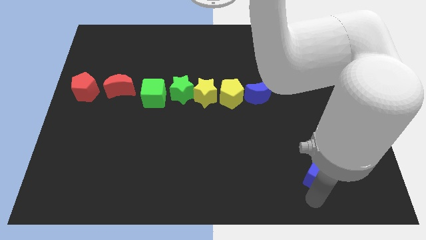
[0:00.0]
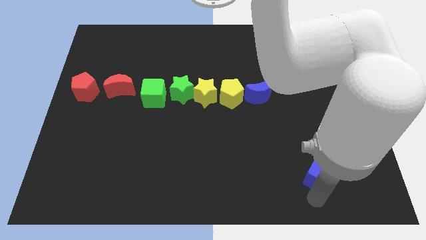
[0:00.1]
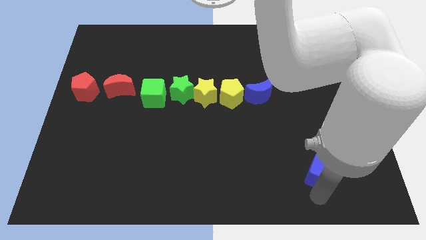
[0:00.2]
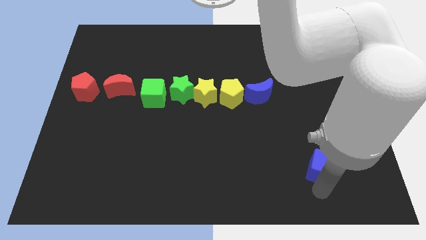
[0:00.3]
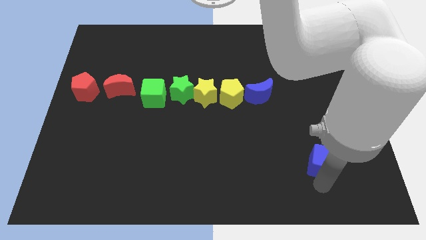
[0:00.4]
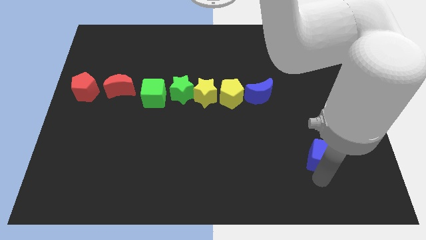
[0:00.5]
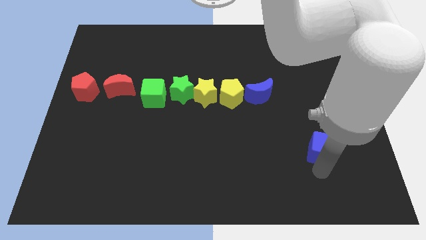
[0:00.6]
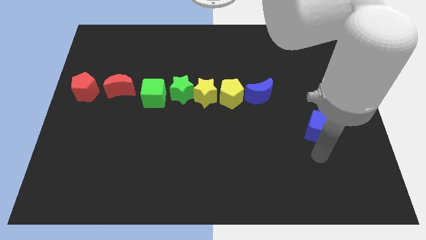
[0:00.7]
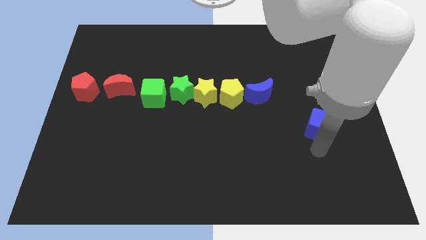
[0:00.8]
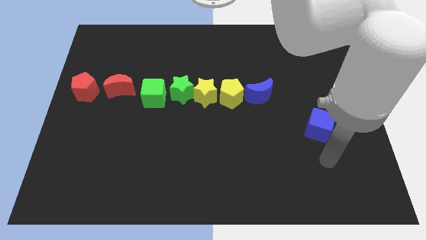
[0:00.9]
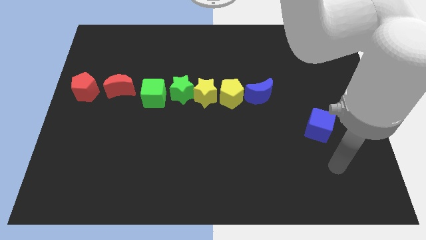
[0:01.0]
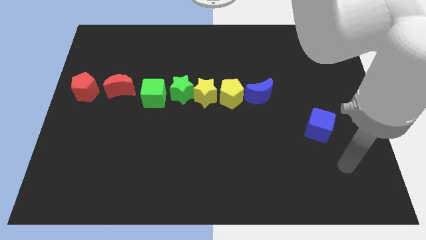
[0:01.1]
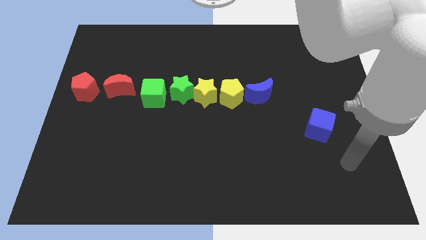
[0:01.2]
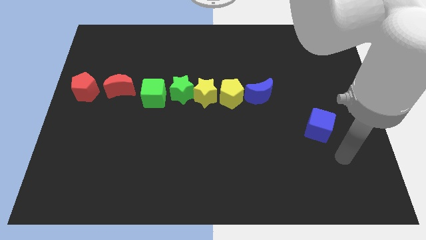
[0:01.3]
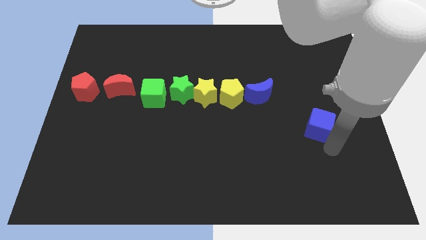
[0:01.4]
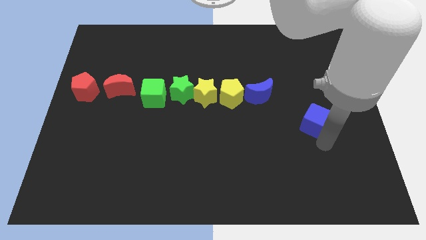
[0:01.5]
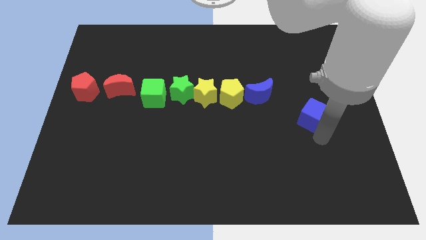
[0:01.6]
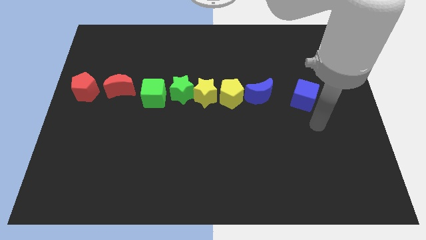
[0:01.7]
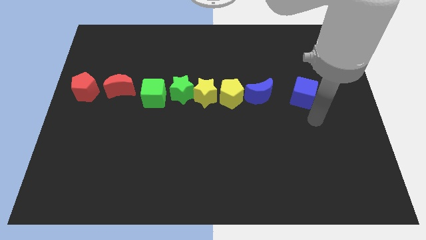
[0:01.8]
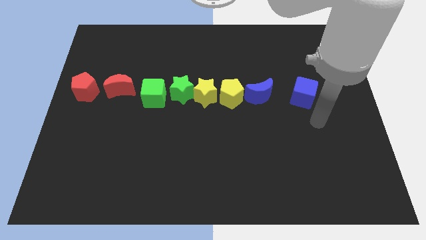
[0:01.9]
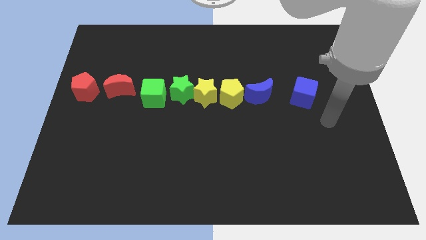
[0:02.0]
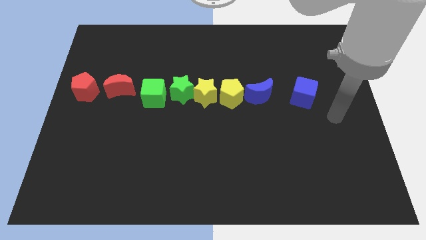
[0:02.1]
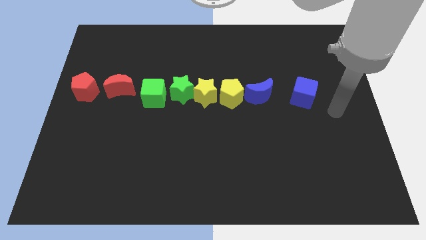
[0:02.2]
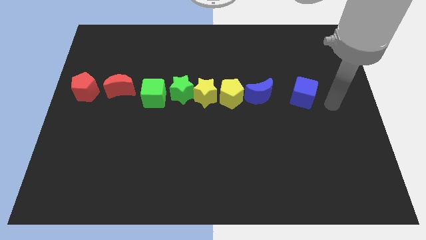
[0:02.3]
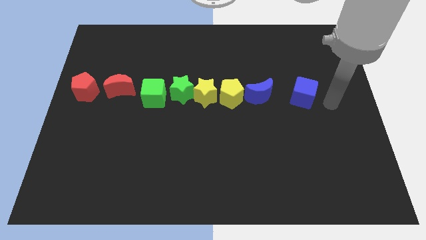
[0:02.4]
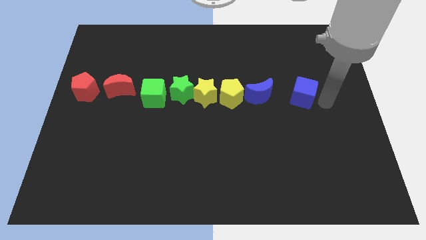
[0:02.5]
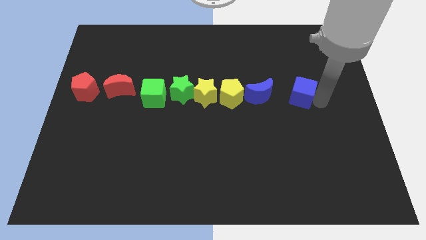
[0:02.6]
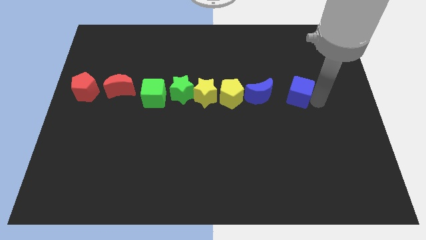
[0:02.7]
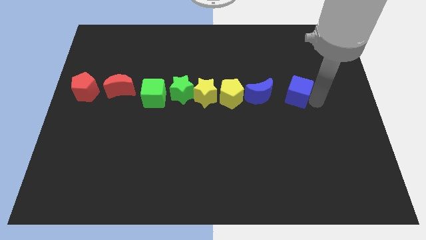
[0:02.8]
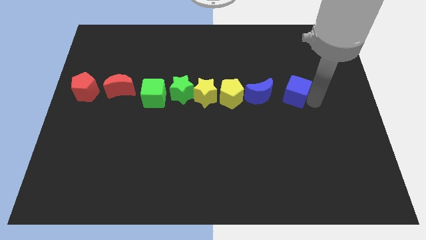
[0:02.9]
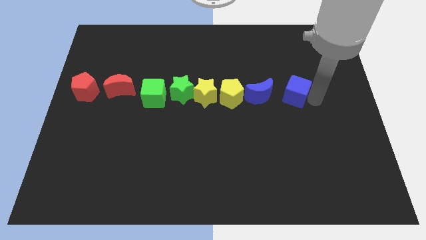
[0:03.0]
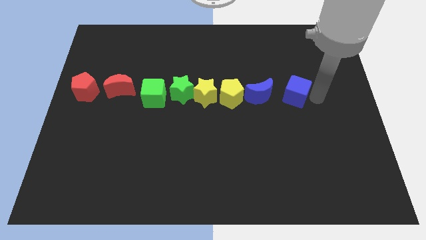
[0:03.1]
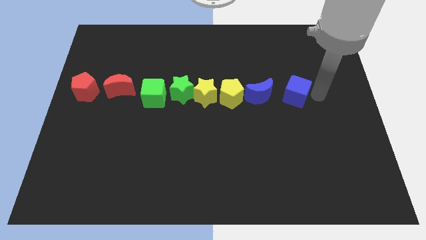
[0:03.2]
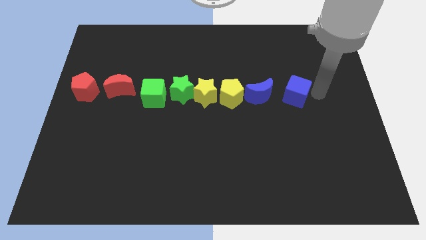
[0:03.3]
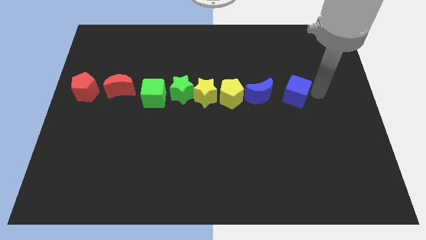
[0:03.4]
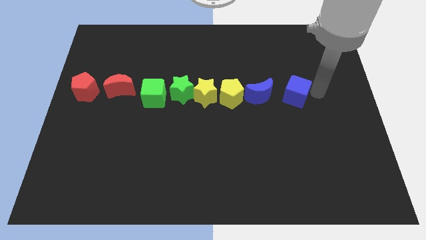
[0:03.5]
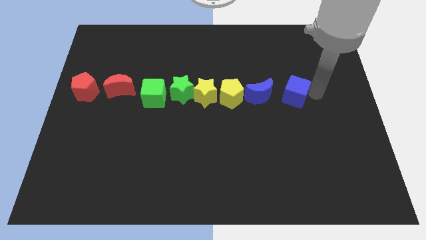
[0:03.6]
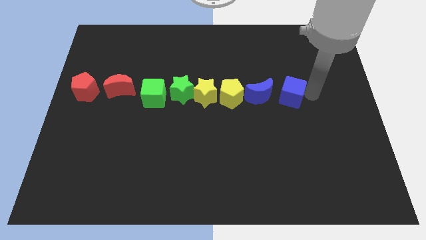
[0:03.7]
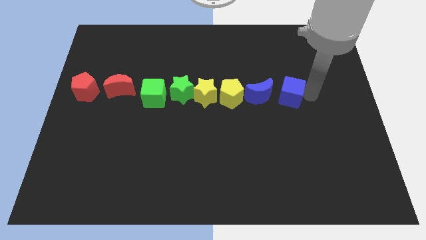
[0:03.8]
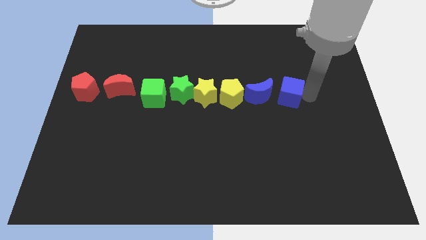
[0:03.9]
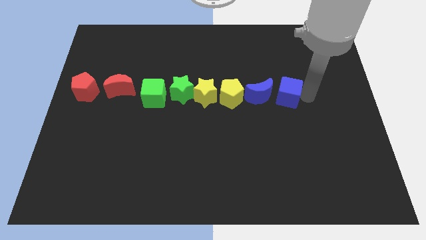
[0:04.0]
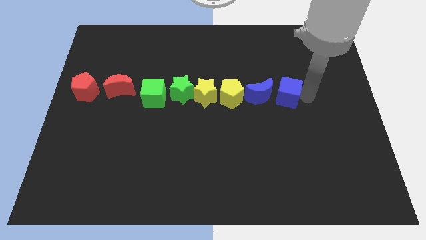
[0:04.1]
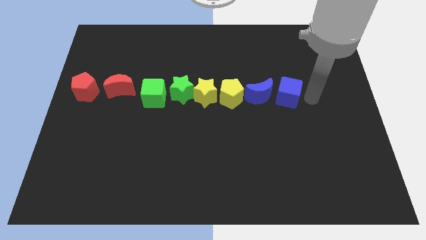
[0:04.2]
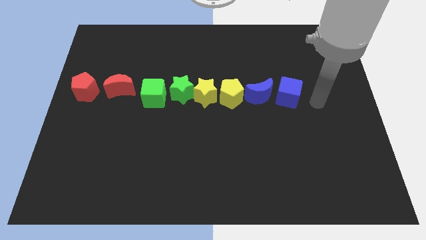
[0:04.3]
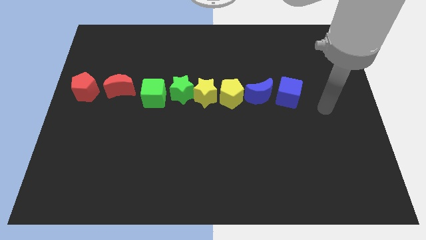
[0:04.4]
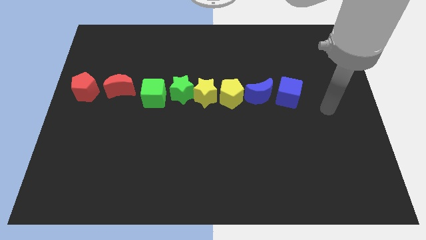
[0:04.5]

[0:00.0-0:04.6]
place the blue cube to the right side of the blue crescent

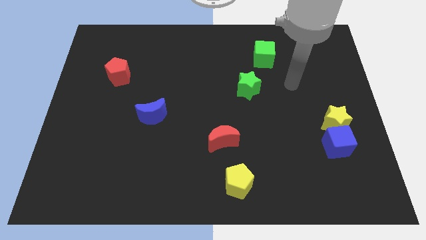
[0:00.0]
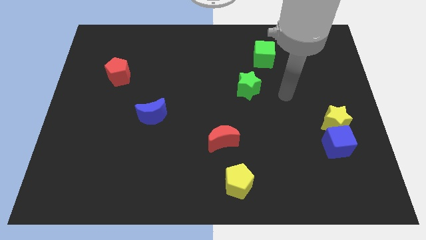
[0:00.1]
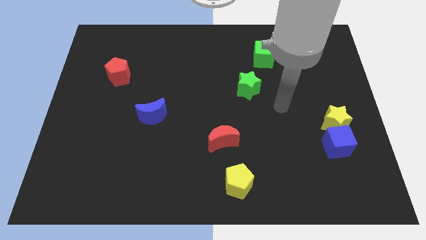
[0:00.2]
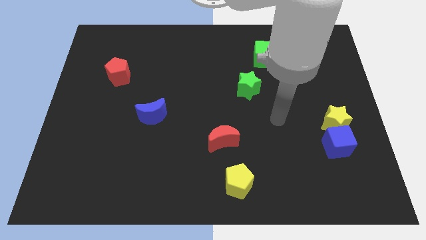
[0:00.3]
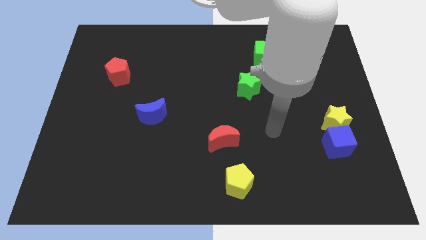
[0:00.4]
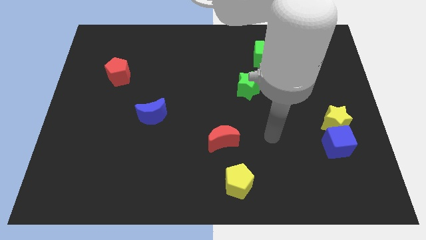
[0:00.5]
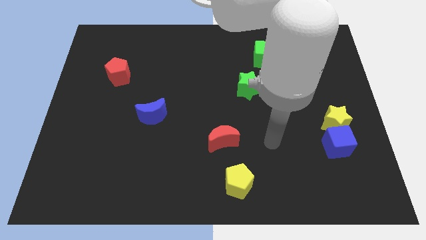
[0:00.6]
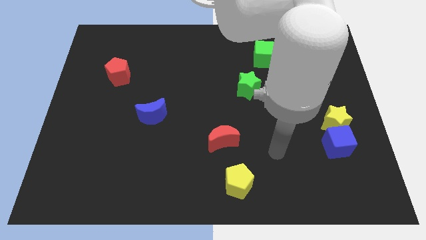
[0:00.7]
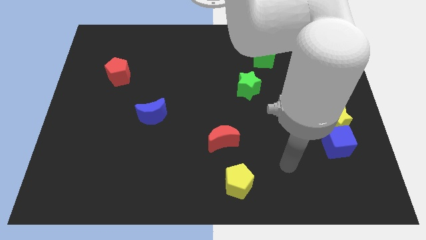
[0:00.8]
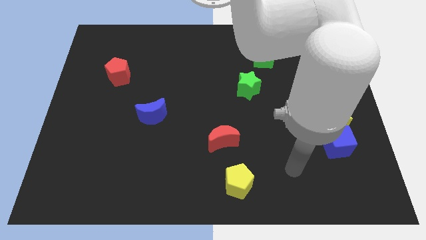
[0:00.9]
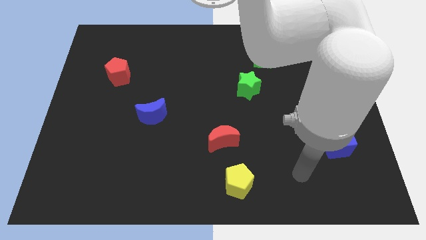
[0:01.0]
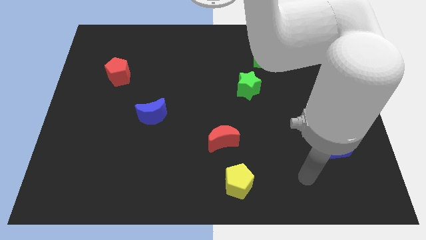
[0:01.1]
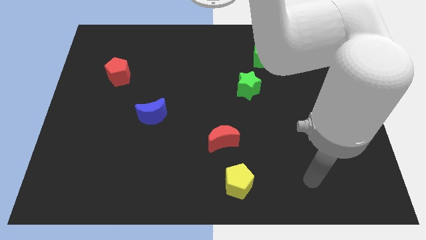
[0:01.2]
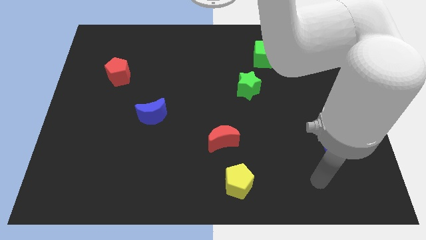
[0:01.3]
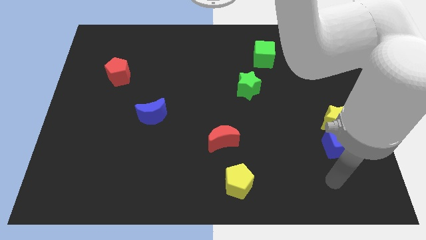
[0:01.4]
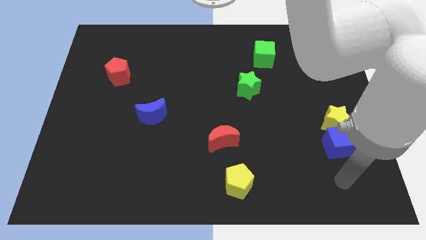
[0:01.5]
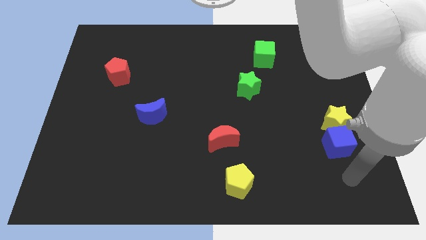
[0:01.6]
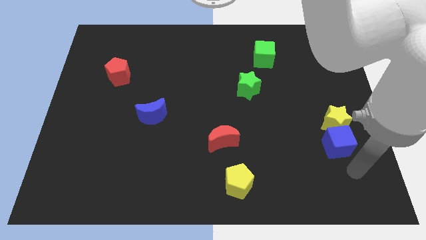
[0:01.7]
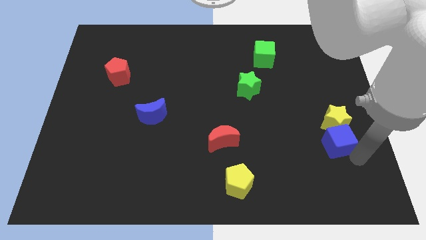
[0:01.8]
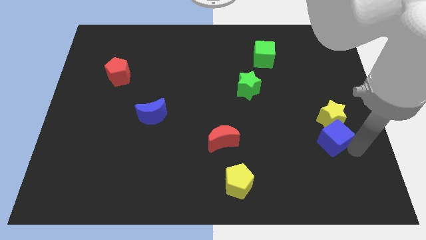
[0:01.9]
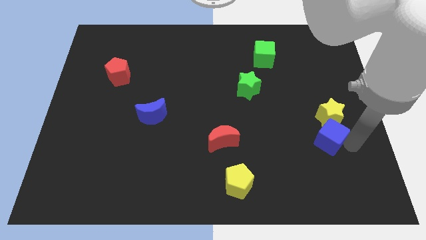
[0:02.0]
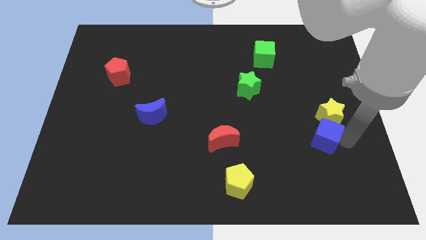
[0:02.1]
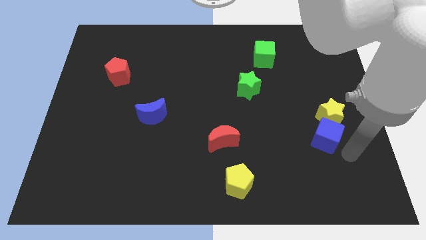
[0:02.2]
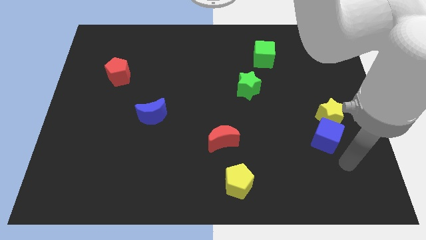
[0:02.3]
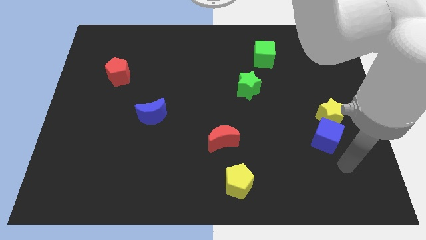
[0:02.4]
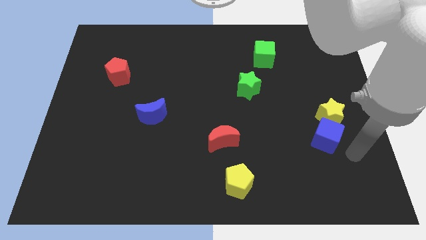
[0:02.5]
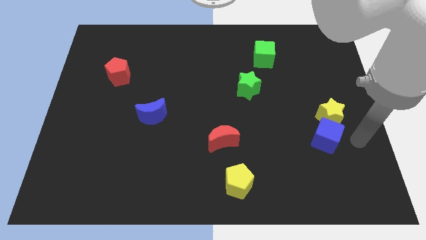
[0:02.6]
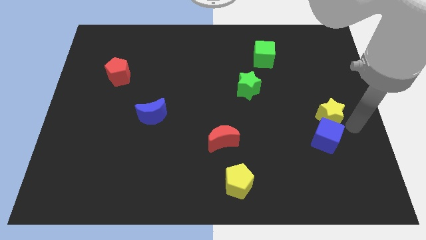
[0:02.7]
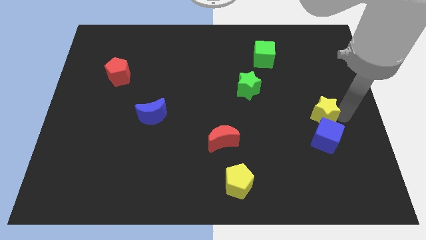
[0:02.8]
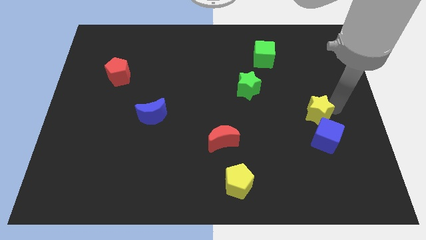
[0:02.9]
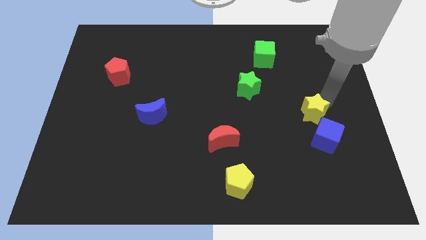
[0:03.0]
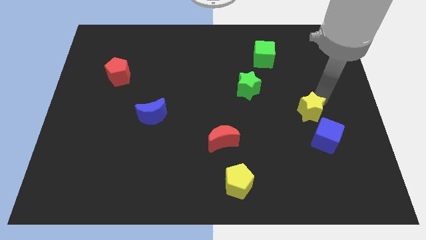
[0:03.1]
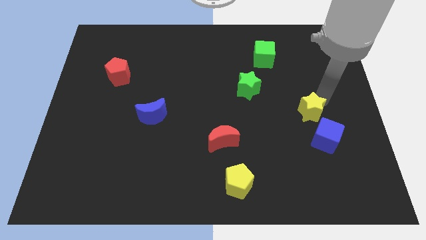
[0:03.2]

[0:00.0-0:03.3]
go and separate the yellow star and blue cube

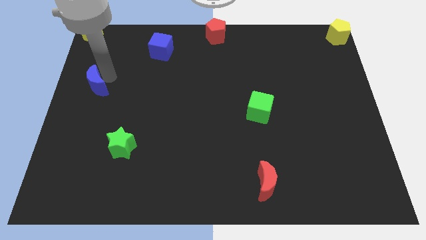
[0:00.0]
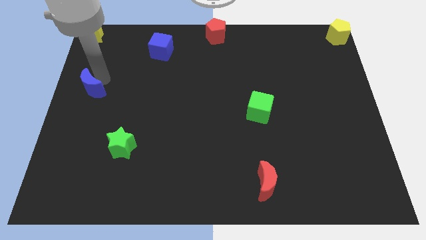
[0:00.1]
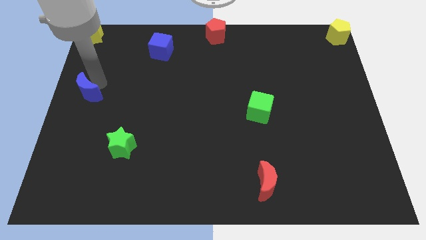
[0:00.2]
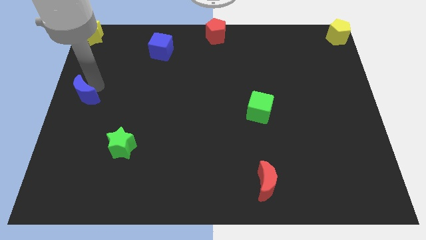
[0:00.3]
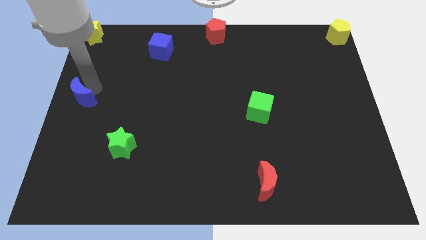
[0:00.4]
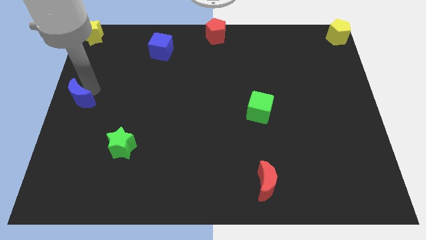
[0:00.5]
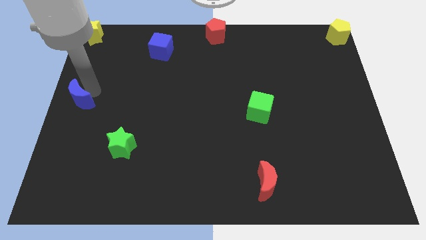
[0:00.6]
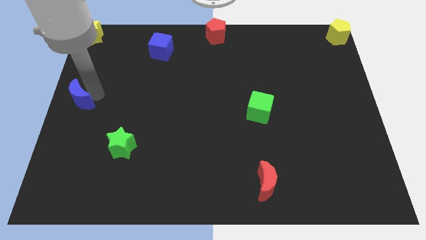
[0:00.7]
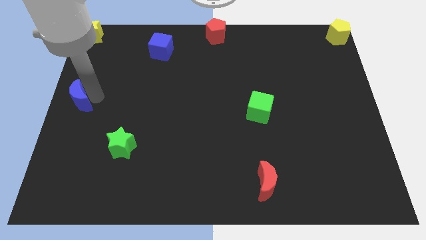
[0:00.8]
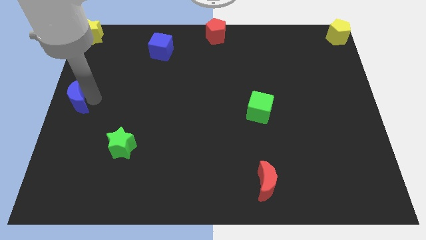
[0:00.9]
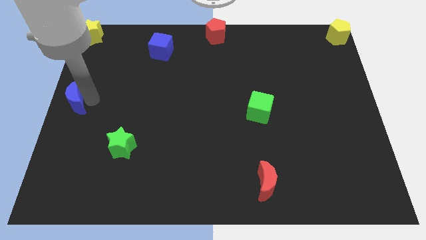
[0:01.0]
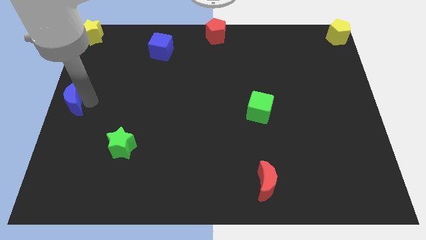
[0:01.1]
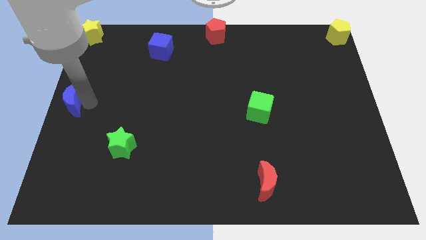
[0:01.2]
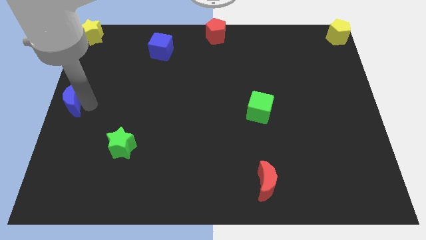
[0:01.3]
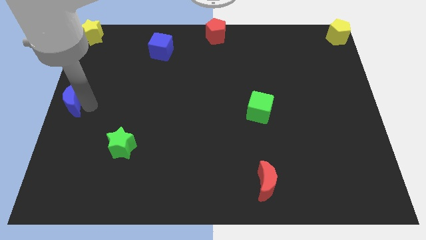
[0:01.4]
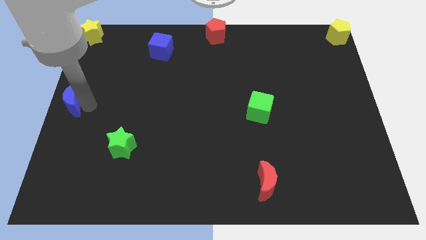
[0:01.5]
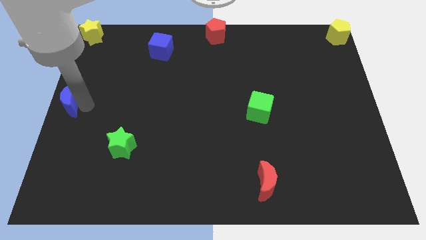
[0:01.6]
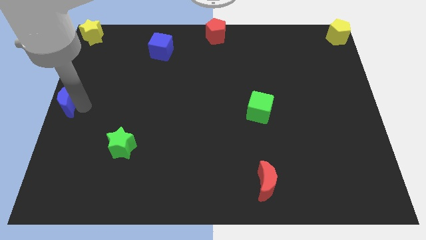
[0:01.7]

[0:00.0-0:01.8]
move the blue moon to the left center of the board
